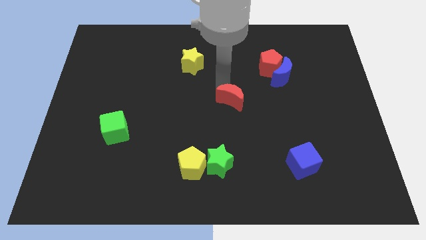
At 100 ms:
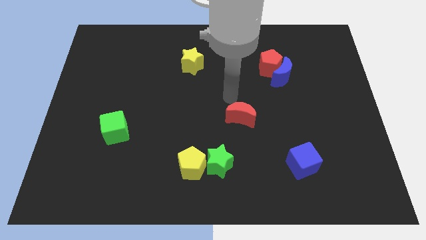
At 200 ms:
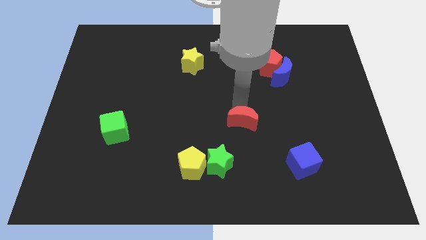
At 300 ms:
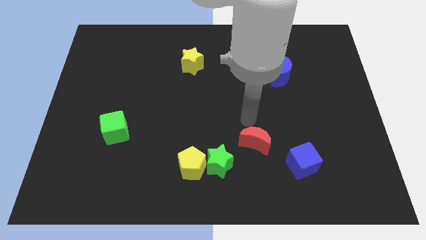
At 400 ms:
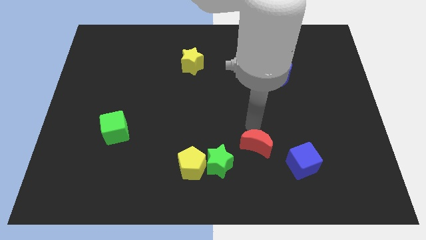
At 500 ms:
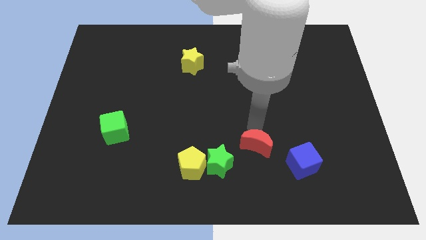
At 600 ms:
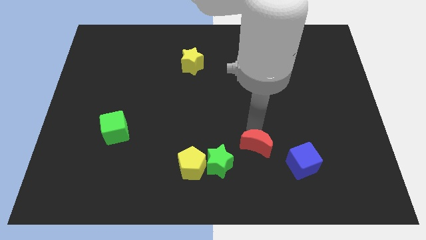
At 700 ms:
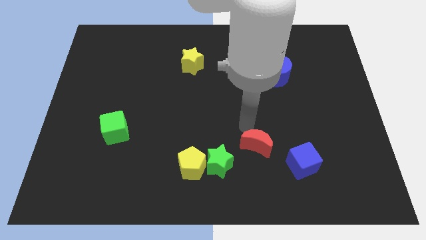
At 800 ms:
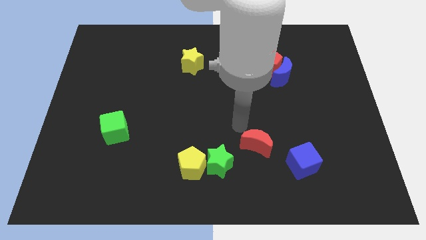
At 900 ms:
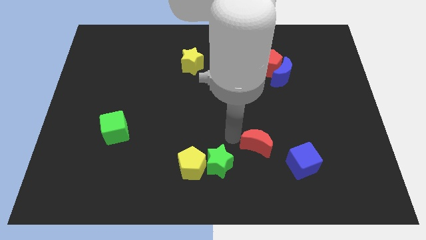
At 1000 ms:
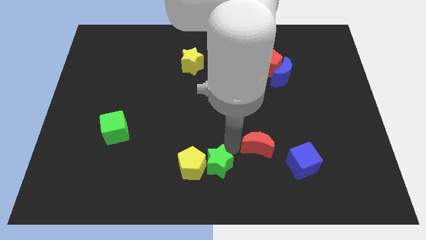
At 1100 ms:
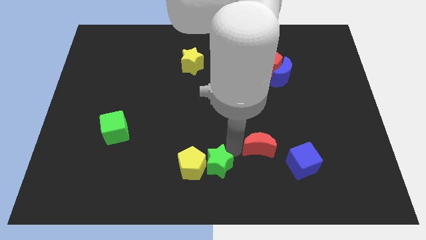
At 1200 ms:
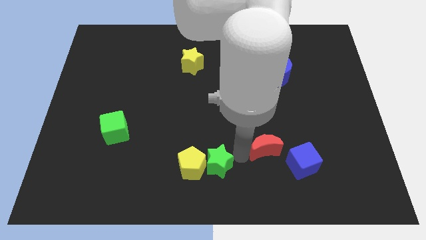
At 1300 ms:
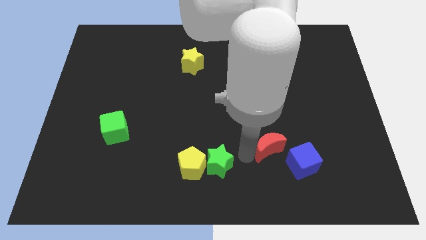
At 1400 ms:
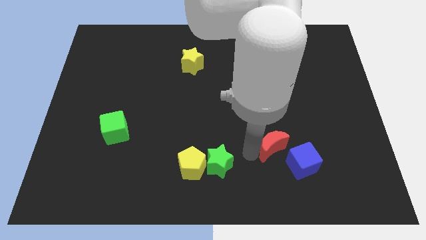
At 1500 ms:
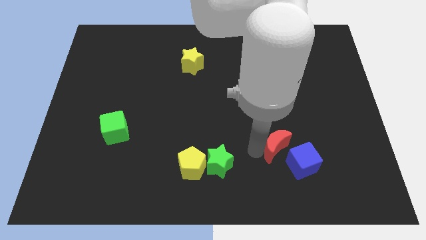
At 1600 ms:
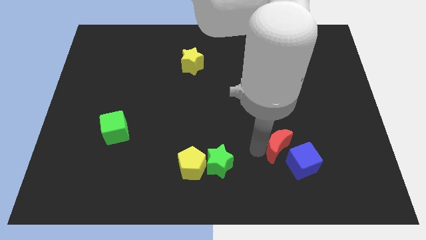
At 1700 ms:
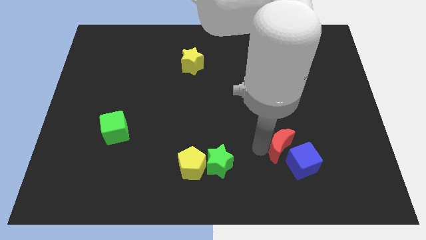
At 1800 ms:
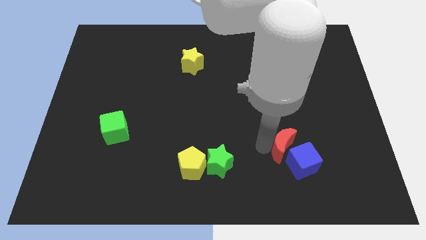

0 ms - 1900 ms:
drag the red moon towards the blue cube

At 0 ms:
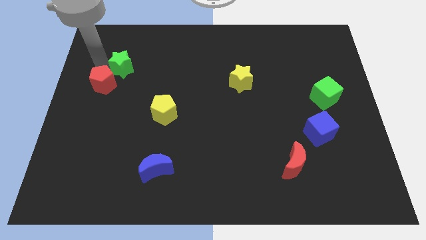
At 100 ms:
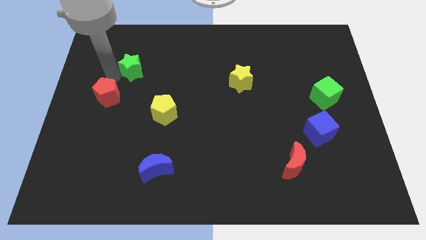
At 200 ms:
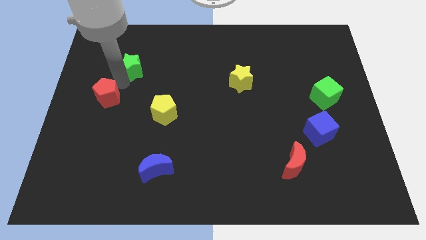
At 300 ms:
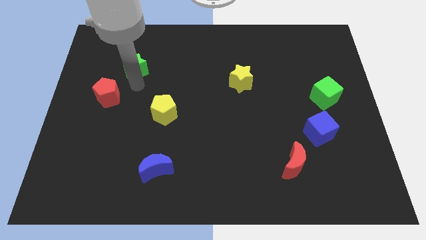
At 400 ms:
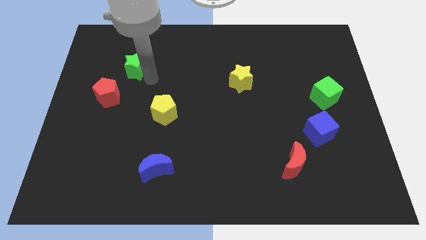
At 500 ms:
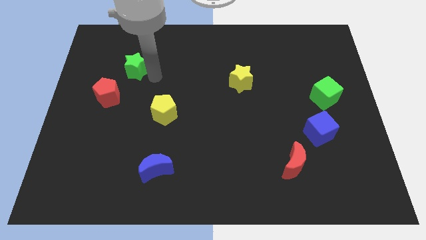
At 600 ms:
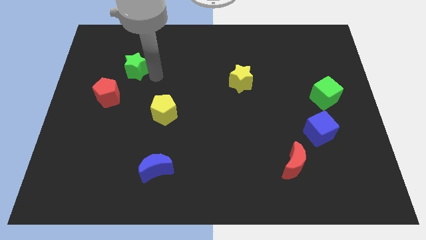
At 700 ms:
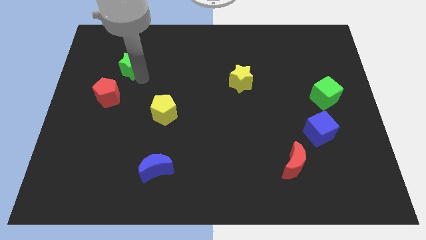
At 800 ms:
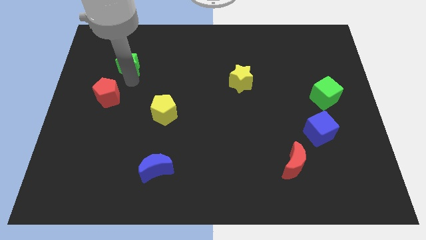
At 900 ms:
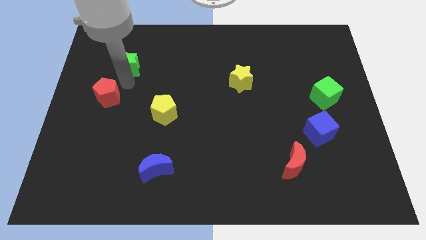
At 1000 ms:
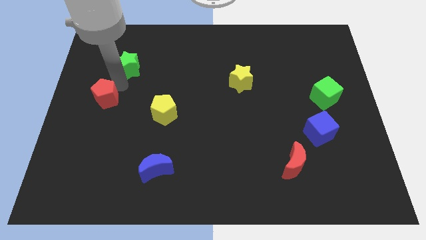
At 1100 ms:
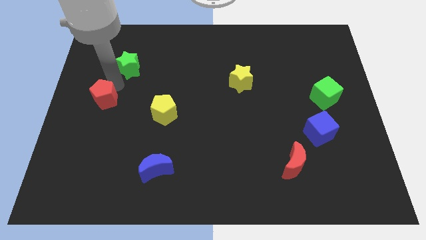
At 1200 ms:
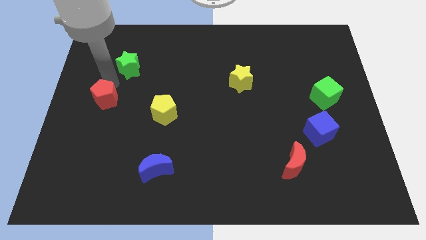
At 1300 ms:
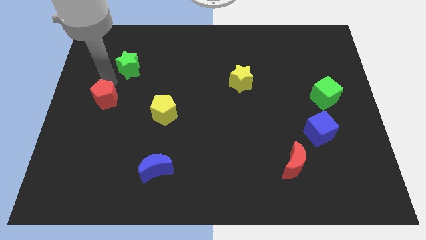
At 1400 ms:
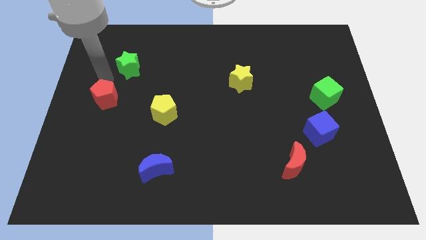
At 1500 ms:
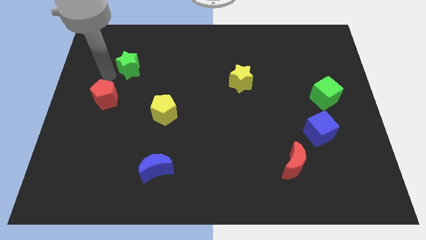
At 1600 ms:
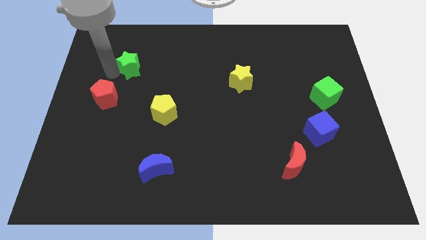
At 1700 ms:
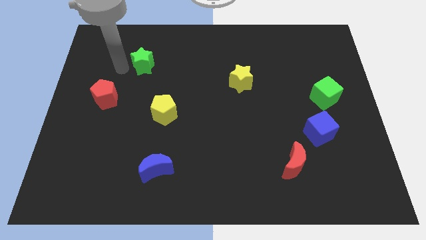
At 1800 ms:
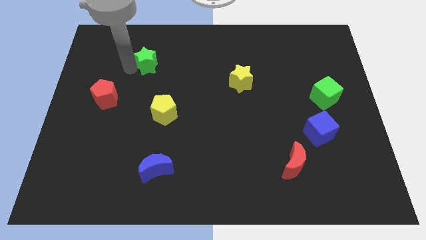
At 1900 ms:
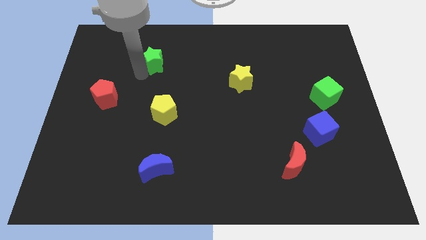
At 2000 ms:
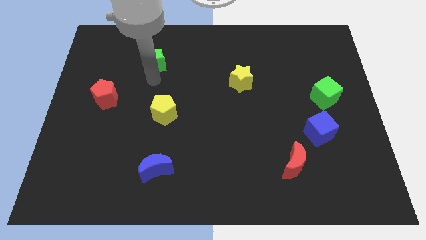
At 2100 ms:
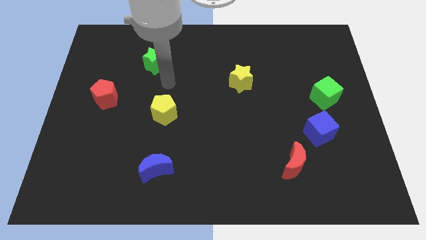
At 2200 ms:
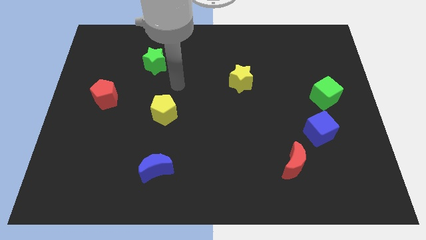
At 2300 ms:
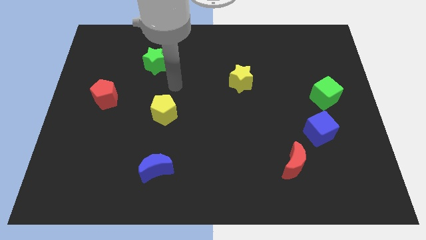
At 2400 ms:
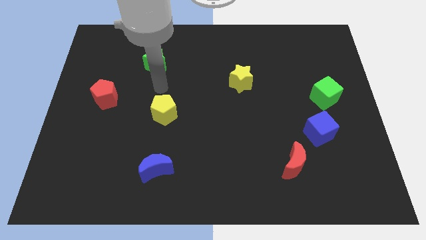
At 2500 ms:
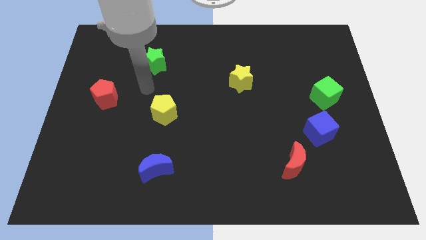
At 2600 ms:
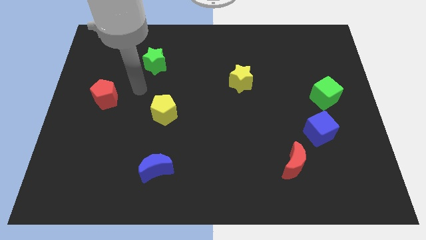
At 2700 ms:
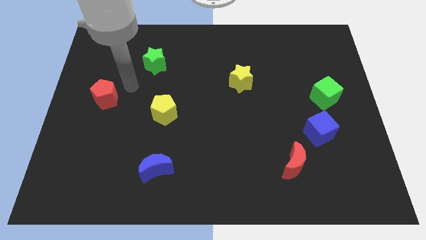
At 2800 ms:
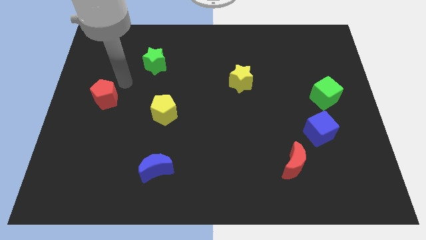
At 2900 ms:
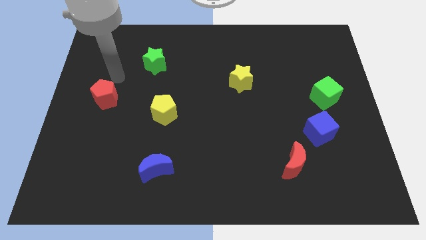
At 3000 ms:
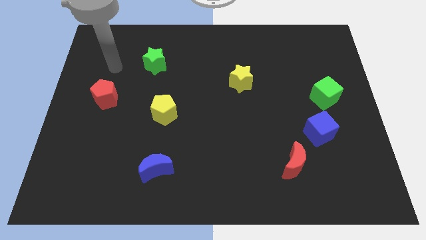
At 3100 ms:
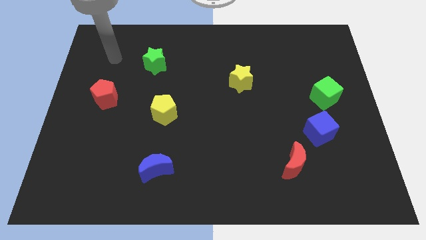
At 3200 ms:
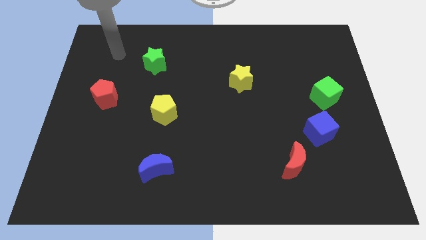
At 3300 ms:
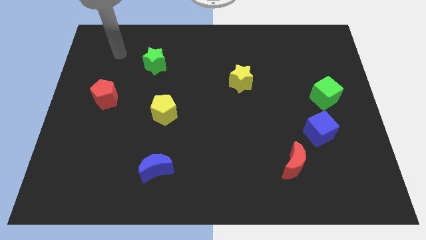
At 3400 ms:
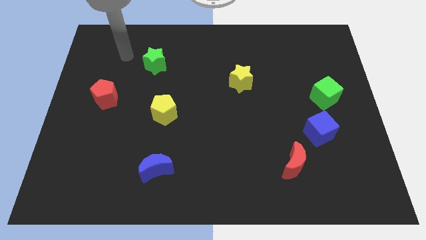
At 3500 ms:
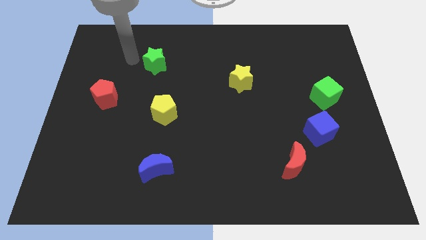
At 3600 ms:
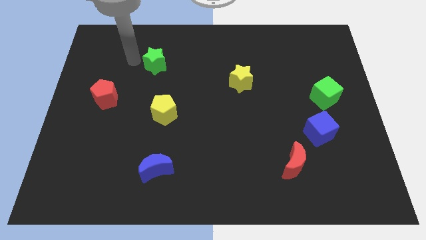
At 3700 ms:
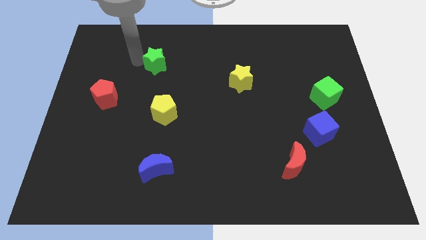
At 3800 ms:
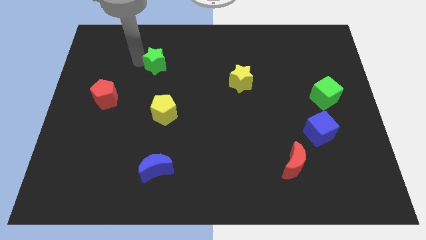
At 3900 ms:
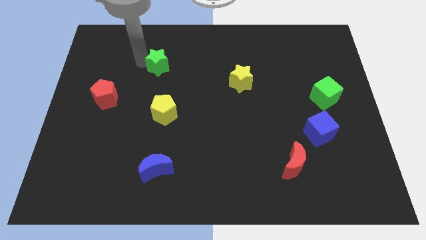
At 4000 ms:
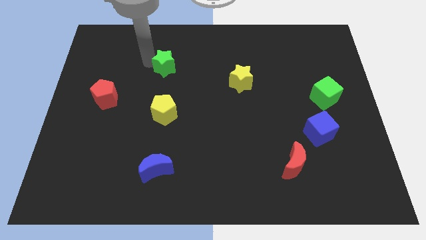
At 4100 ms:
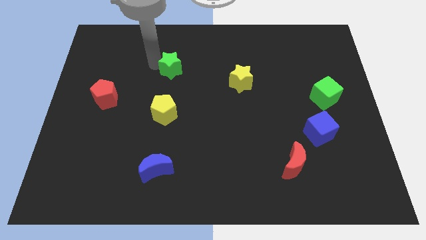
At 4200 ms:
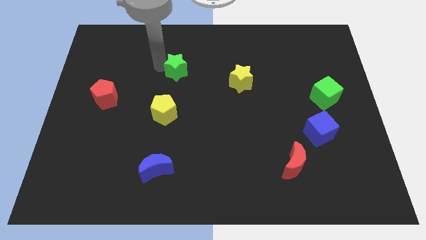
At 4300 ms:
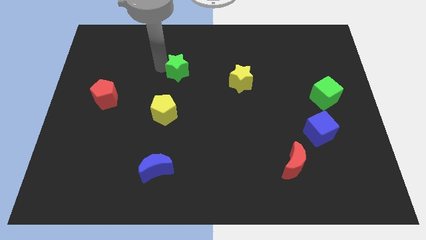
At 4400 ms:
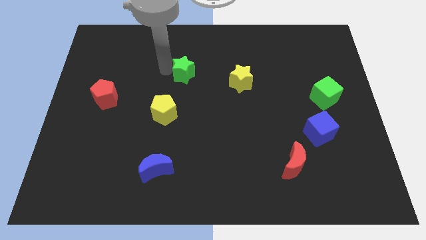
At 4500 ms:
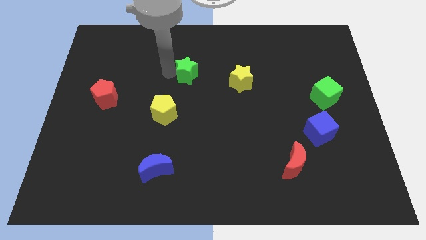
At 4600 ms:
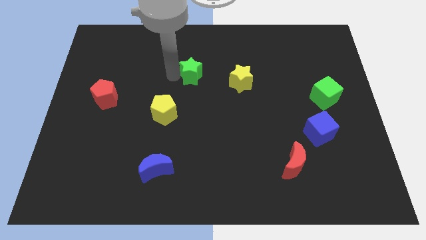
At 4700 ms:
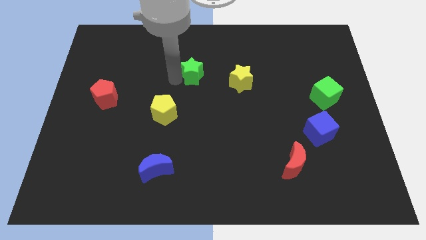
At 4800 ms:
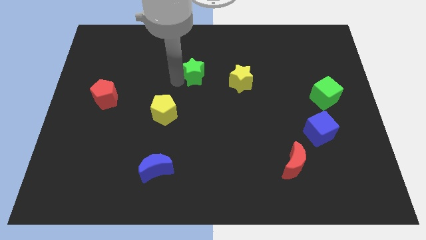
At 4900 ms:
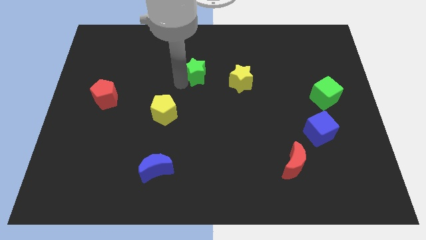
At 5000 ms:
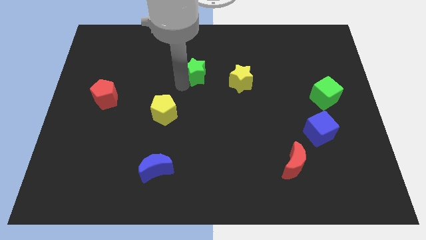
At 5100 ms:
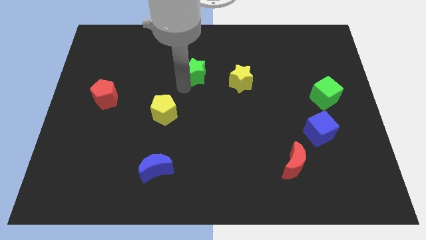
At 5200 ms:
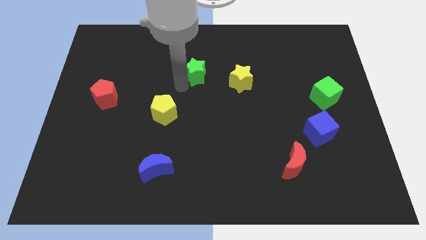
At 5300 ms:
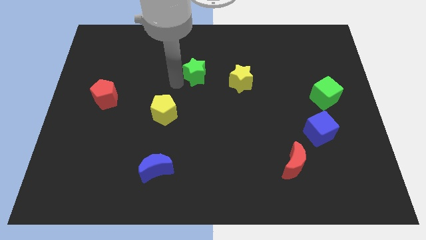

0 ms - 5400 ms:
move the green star slightly towards the yellow star

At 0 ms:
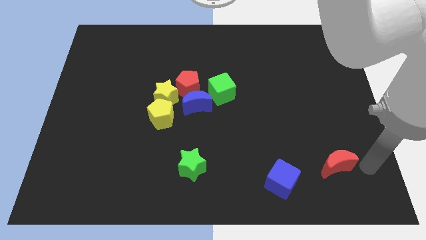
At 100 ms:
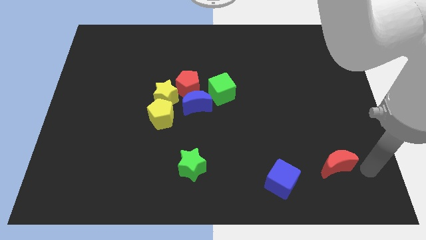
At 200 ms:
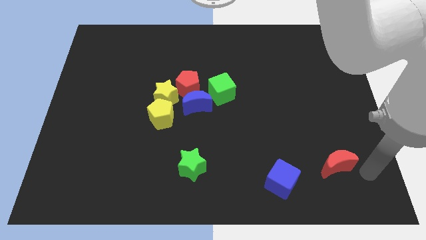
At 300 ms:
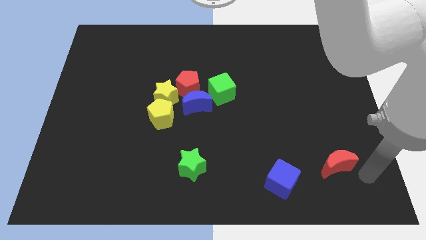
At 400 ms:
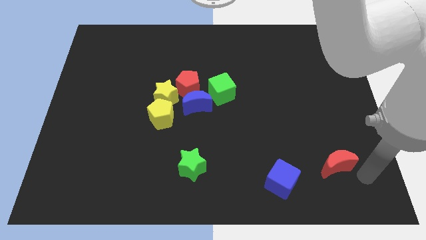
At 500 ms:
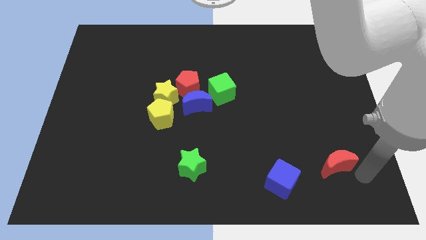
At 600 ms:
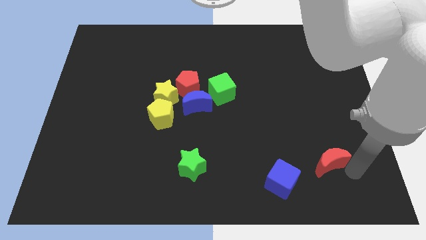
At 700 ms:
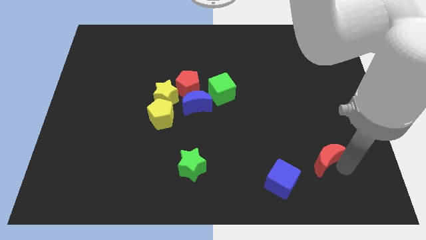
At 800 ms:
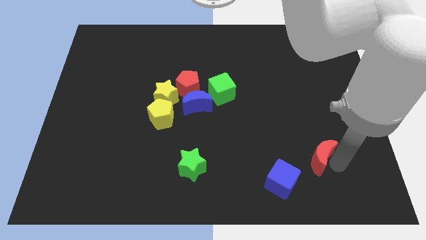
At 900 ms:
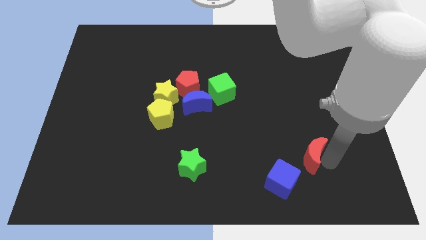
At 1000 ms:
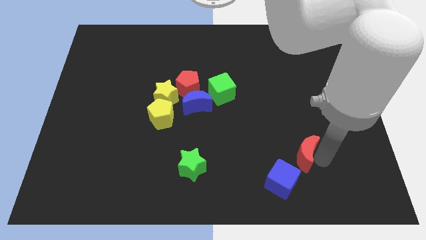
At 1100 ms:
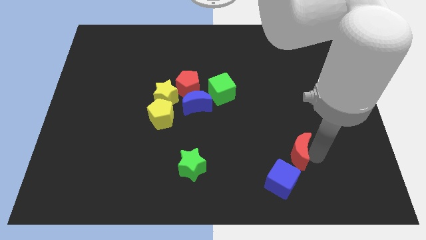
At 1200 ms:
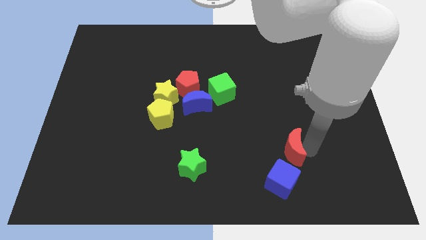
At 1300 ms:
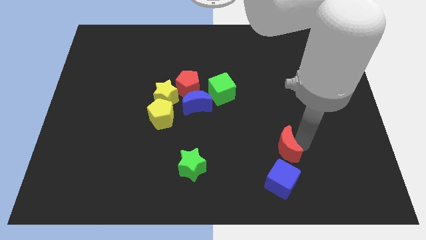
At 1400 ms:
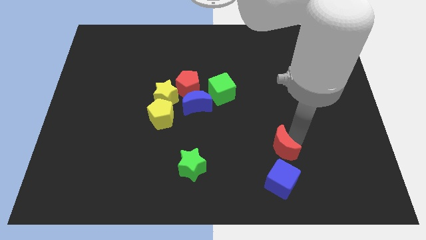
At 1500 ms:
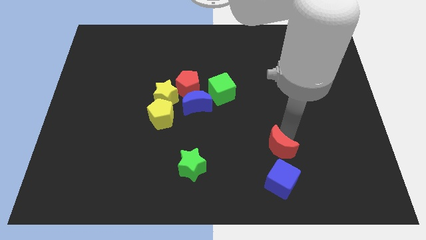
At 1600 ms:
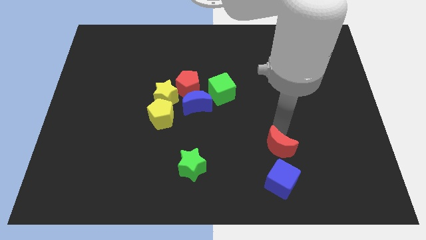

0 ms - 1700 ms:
push the red crescent vertically above the blue cube
